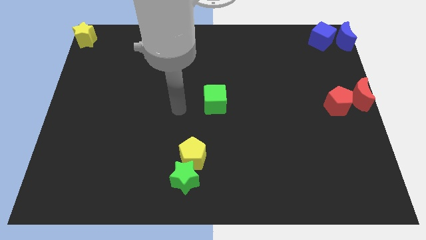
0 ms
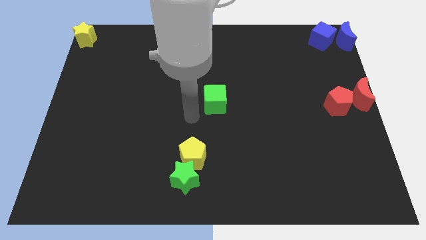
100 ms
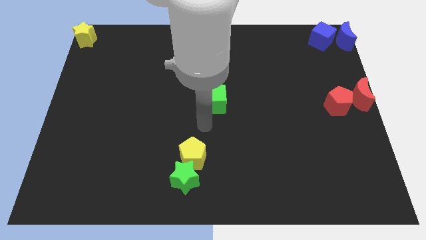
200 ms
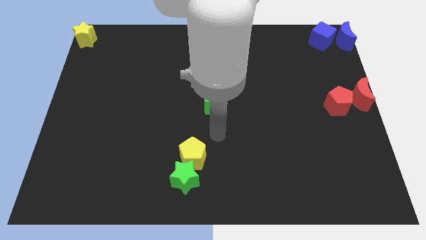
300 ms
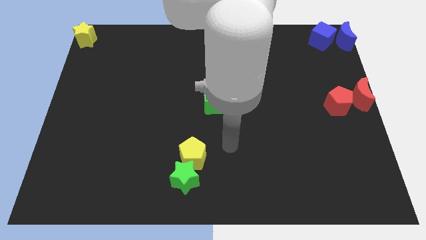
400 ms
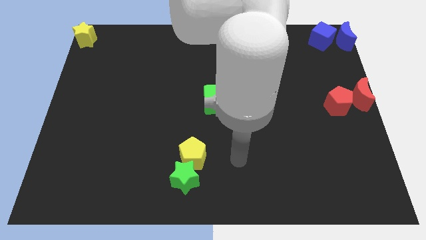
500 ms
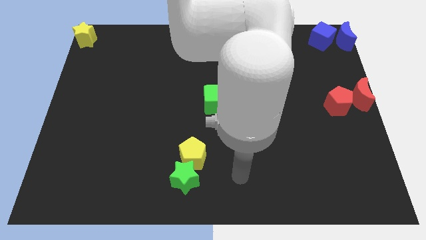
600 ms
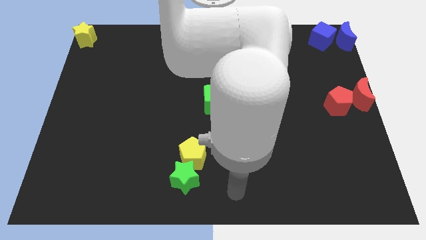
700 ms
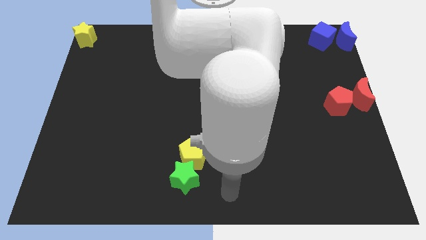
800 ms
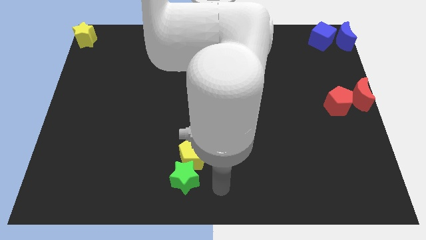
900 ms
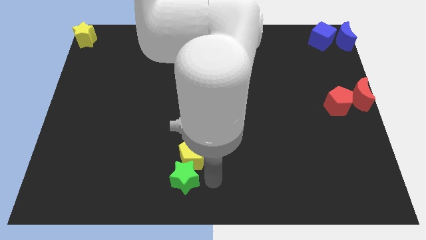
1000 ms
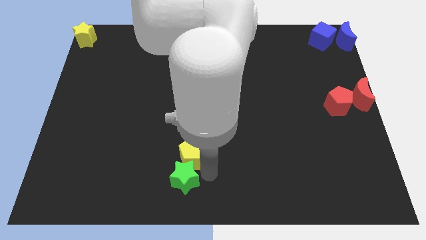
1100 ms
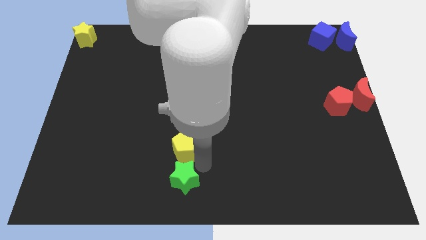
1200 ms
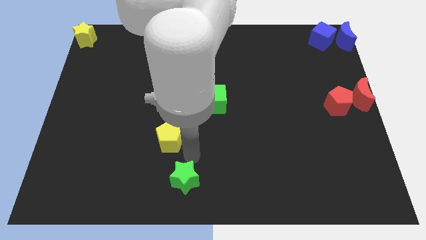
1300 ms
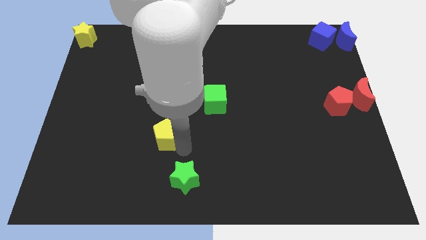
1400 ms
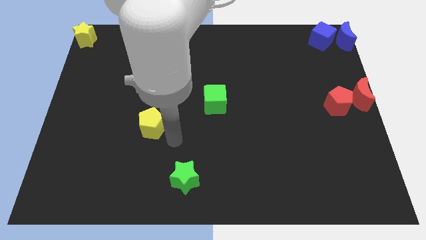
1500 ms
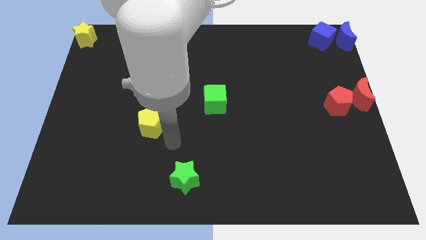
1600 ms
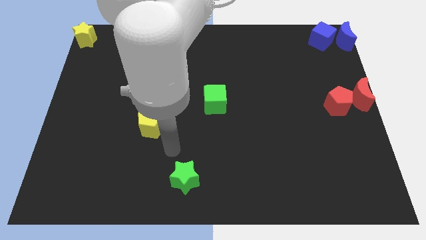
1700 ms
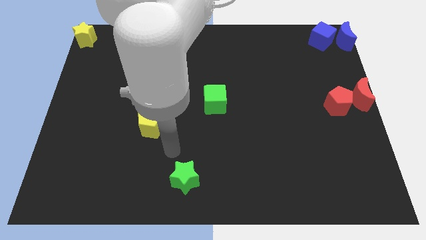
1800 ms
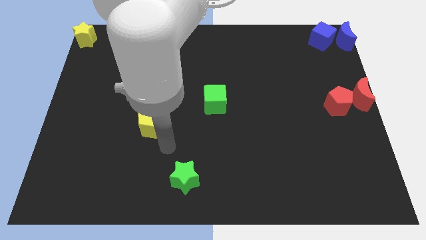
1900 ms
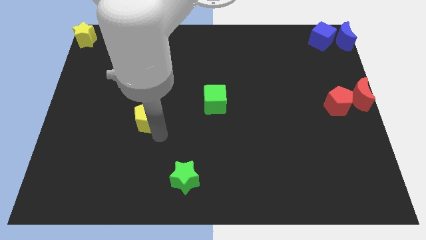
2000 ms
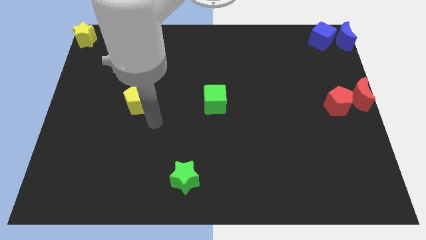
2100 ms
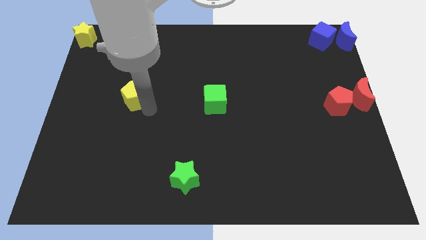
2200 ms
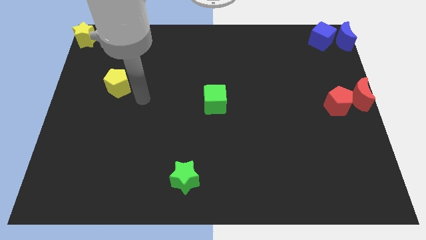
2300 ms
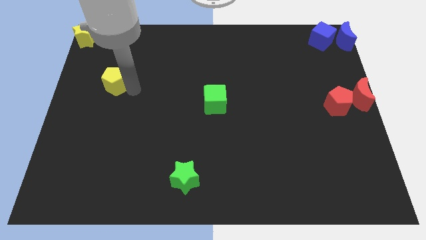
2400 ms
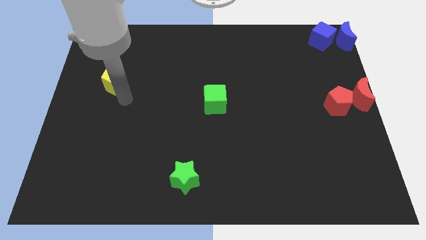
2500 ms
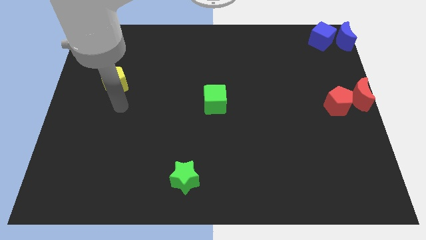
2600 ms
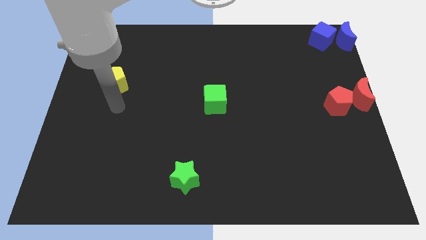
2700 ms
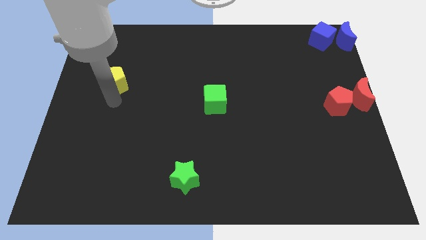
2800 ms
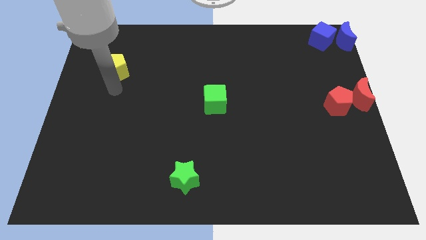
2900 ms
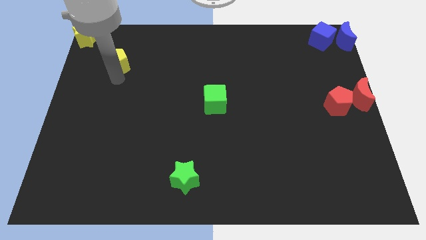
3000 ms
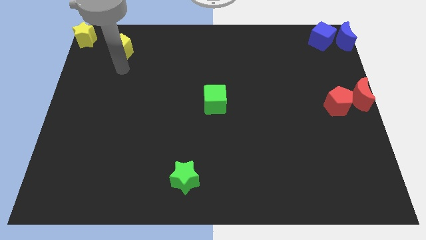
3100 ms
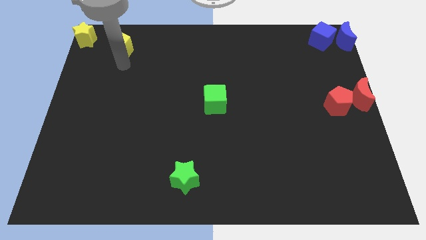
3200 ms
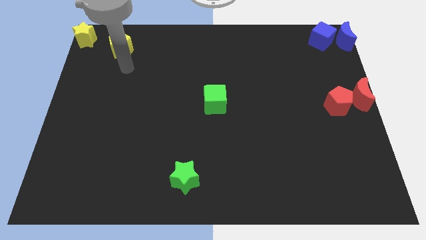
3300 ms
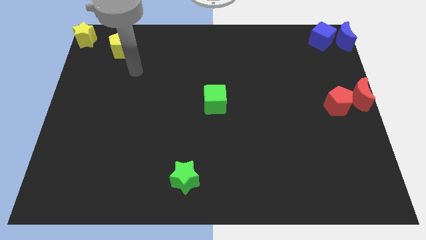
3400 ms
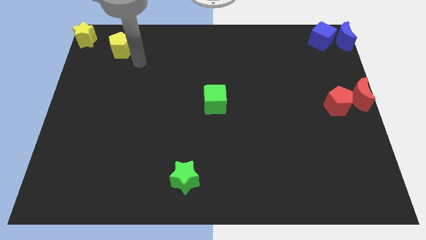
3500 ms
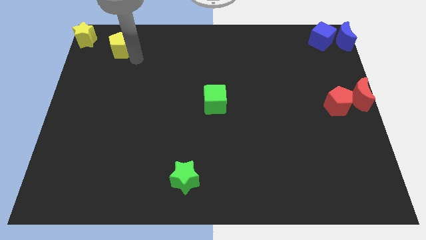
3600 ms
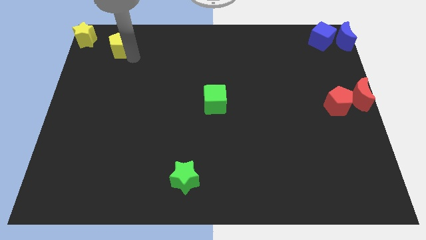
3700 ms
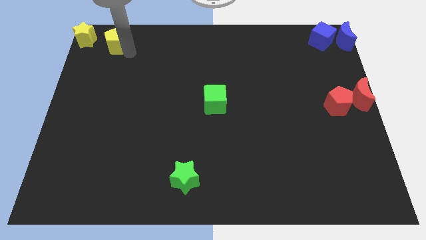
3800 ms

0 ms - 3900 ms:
put the yellow pentagon towards the top left side of the board

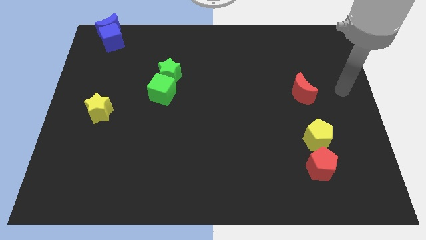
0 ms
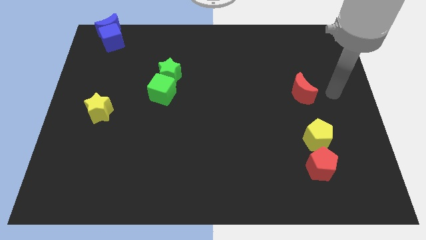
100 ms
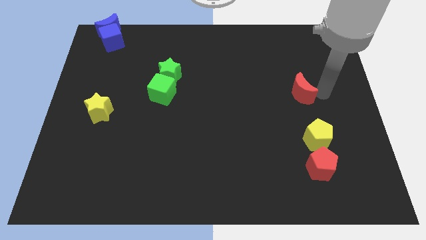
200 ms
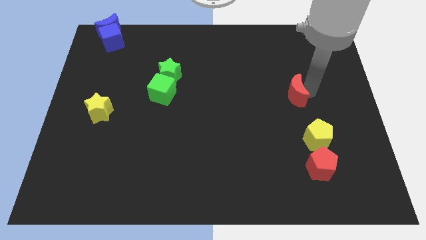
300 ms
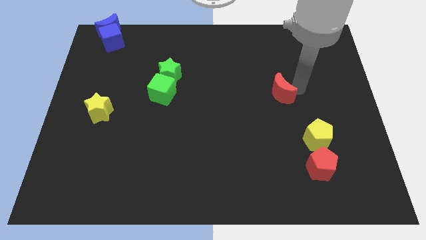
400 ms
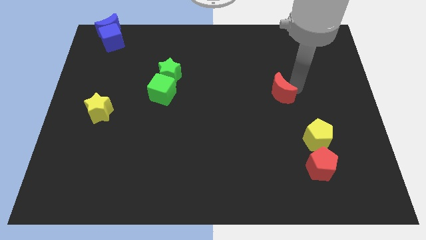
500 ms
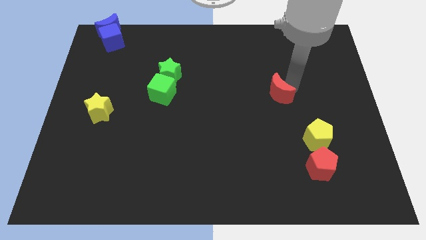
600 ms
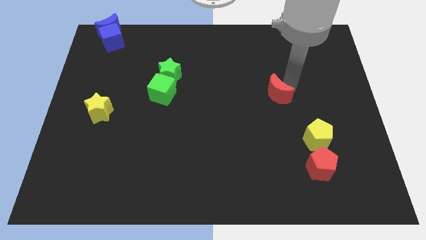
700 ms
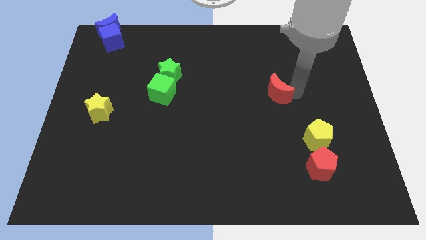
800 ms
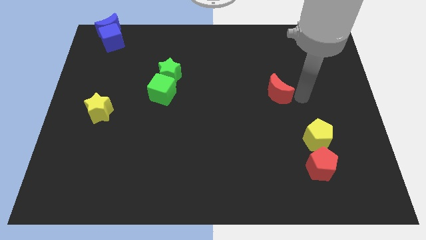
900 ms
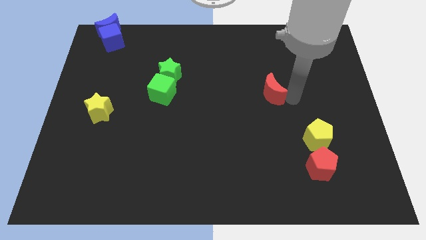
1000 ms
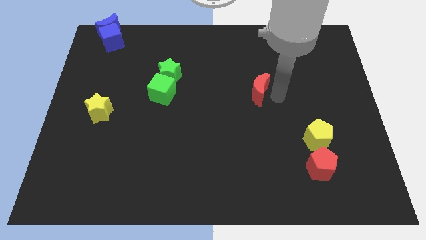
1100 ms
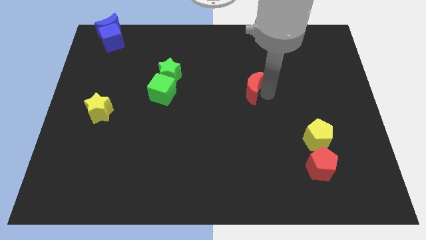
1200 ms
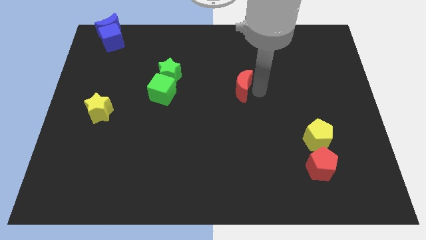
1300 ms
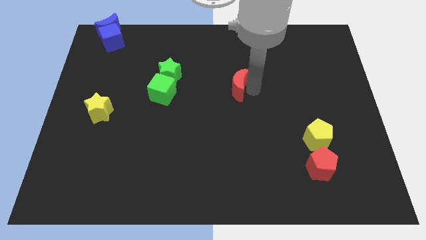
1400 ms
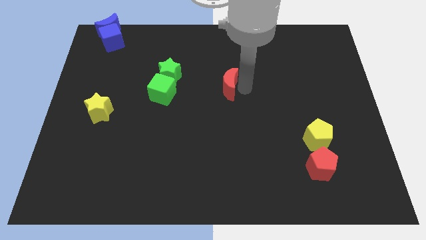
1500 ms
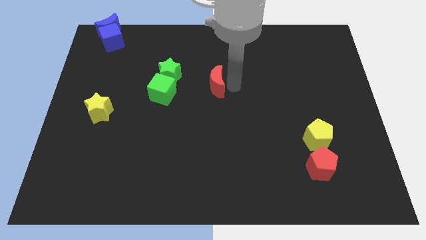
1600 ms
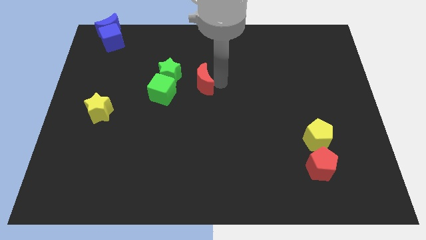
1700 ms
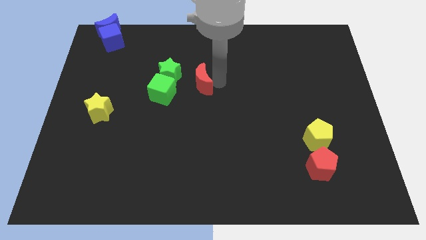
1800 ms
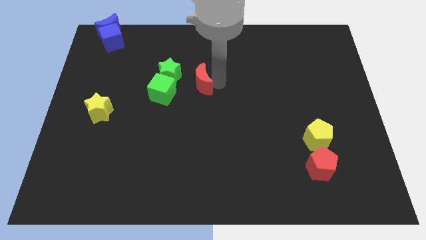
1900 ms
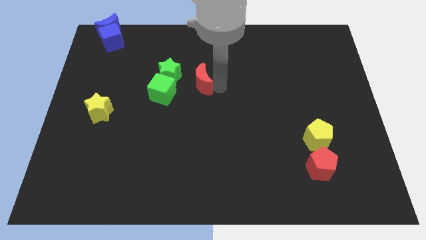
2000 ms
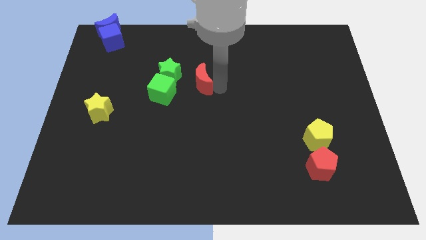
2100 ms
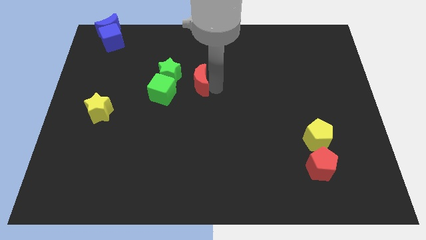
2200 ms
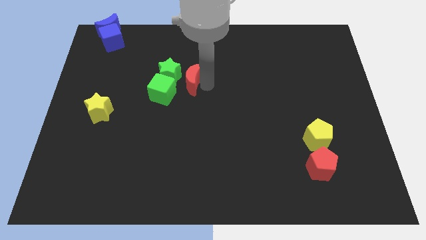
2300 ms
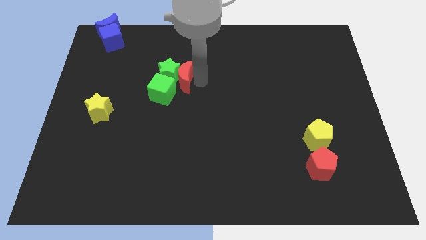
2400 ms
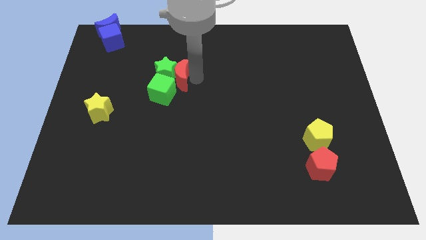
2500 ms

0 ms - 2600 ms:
push red crescent towards green star

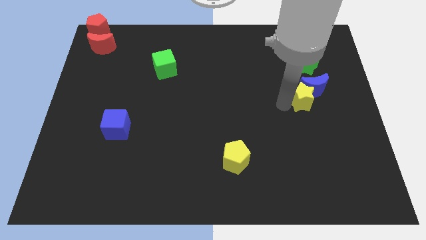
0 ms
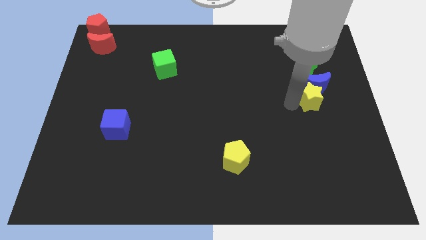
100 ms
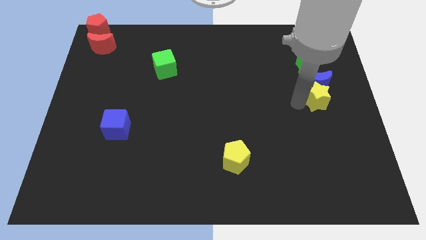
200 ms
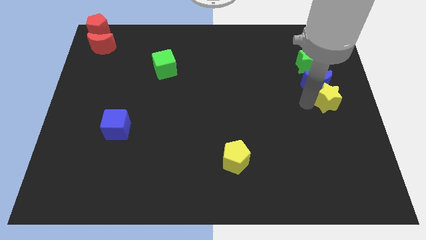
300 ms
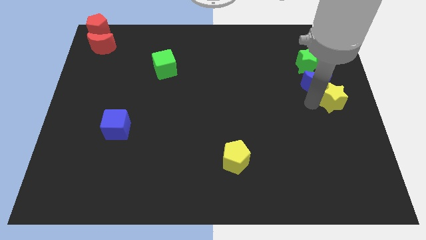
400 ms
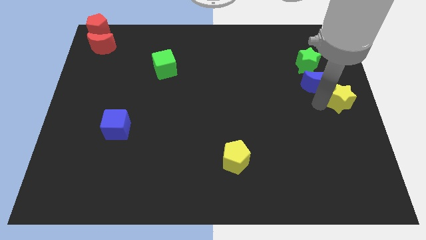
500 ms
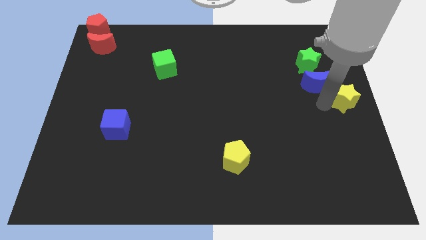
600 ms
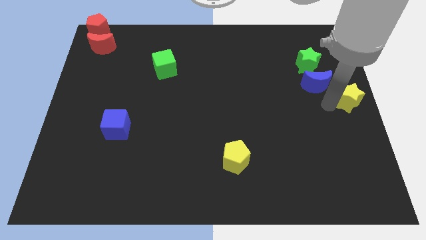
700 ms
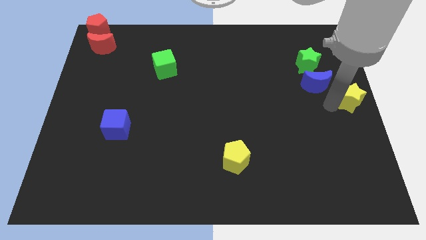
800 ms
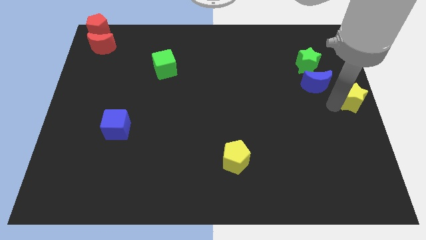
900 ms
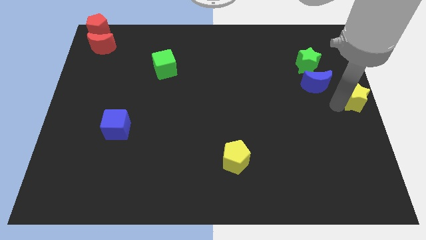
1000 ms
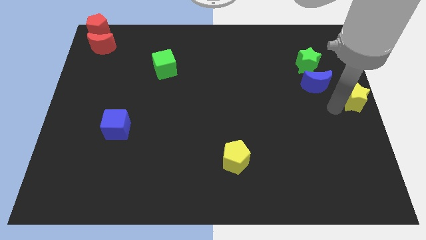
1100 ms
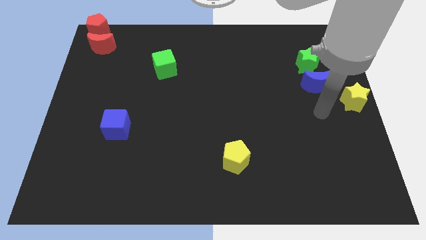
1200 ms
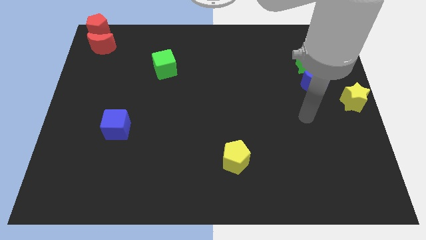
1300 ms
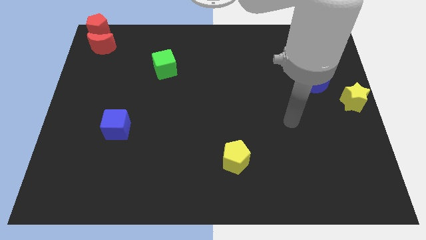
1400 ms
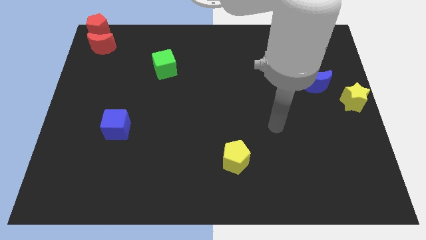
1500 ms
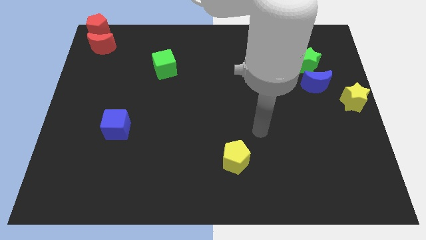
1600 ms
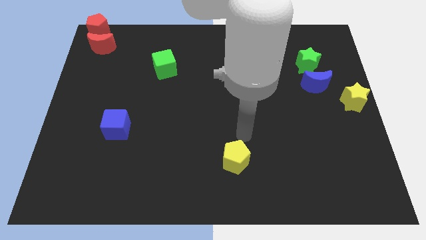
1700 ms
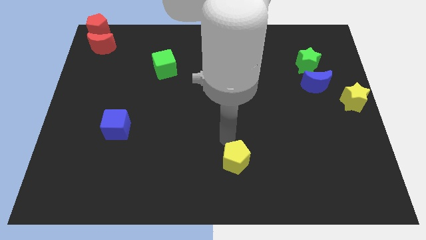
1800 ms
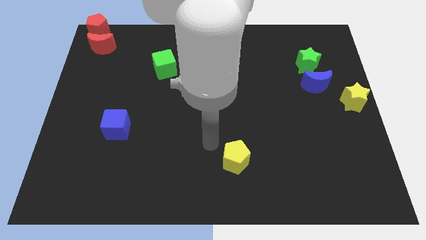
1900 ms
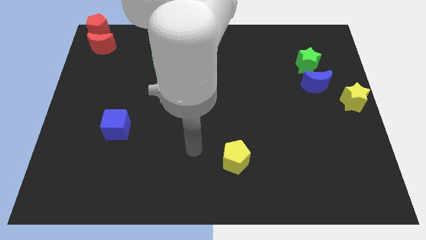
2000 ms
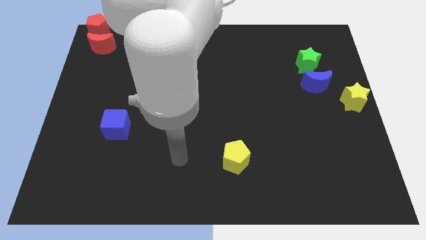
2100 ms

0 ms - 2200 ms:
push the yellow star to the center right

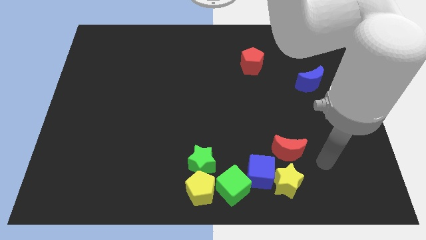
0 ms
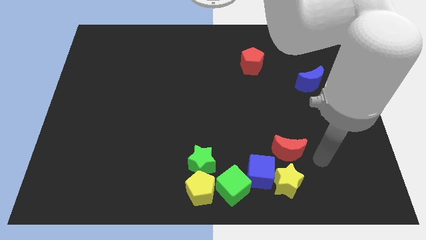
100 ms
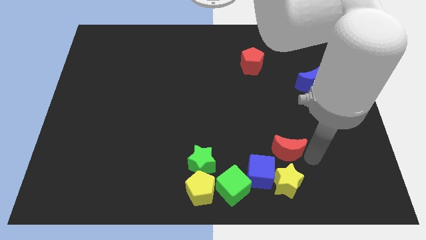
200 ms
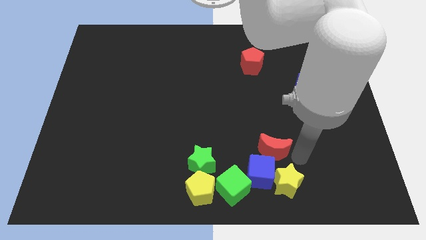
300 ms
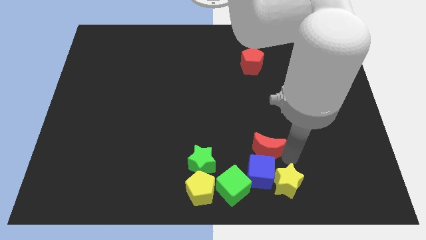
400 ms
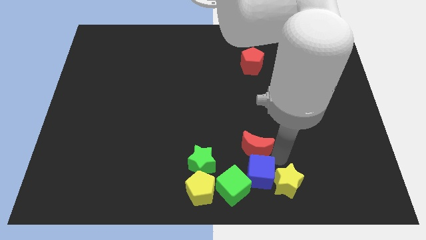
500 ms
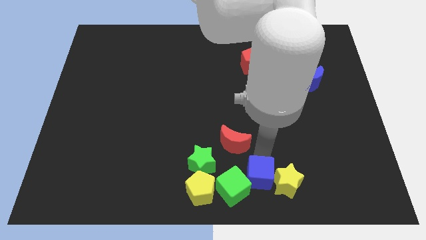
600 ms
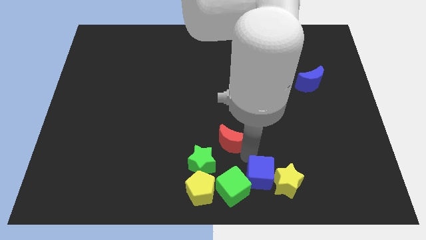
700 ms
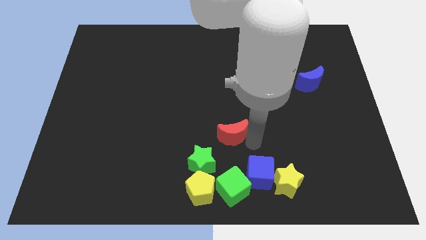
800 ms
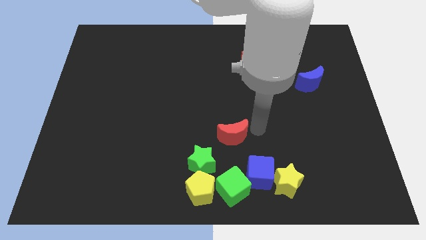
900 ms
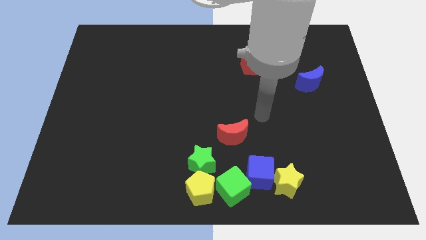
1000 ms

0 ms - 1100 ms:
push the red crescent diagnol to the blue cube
